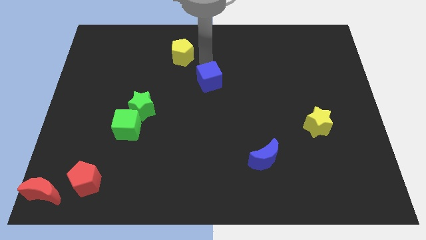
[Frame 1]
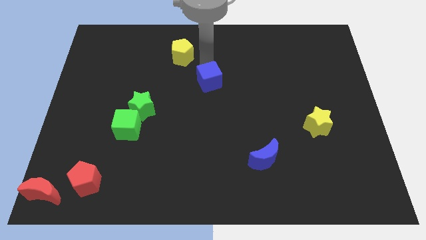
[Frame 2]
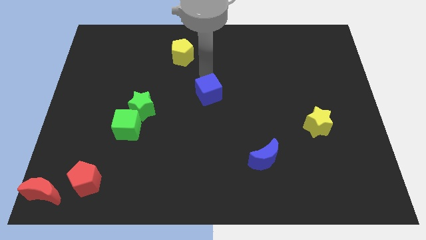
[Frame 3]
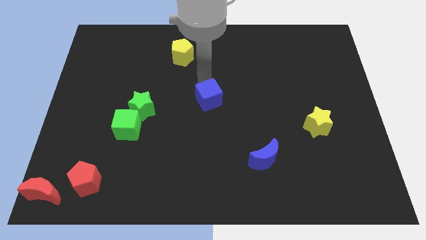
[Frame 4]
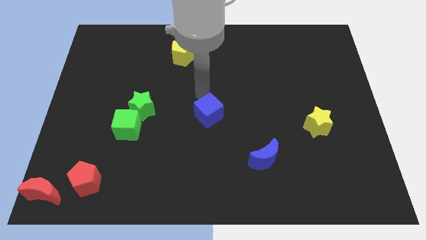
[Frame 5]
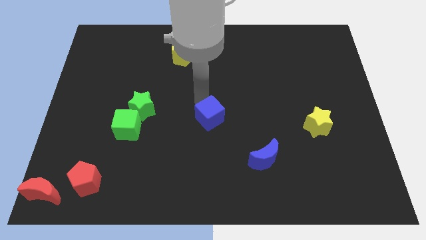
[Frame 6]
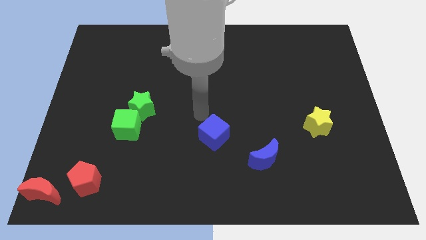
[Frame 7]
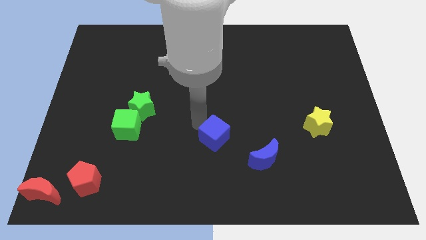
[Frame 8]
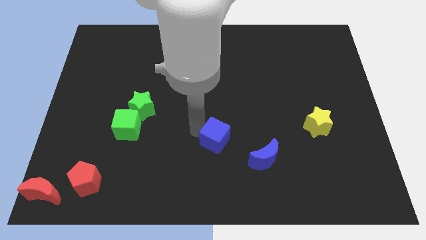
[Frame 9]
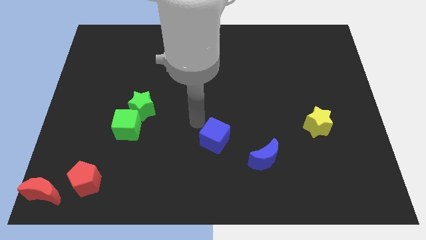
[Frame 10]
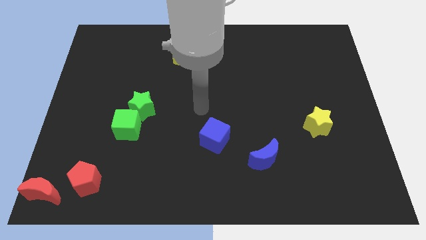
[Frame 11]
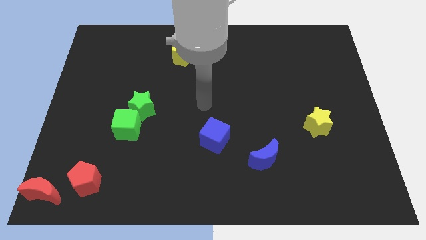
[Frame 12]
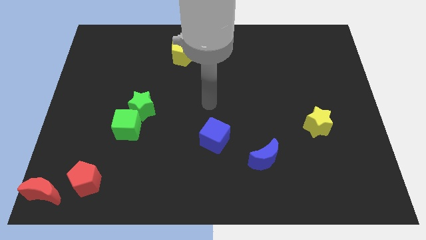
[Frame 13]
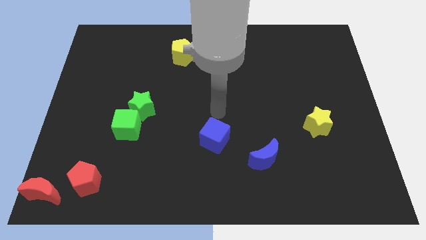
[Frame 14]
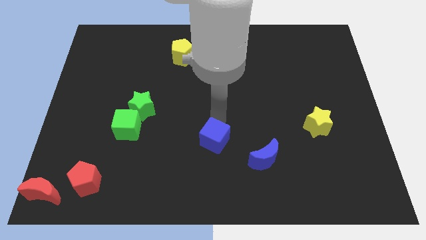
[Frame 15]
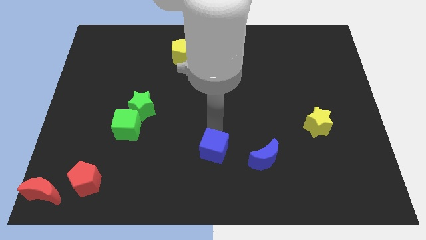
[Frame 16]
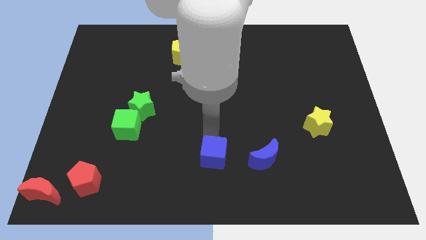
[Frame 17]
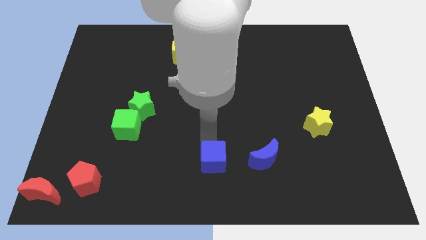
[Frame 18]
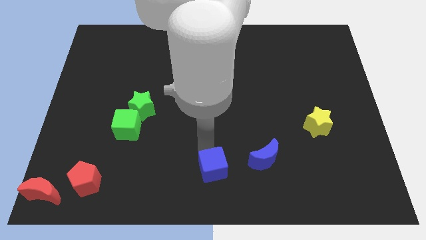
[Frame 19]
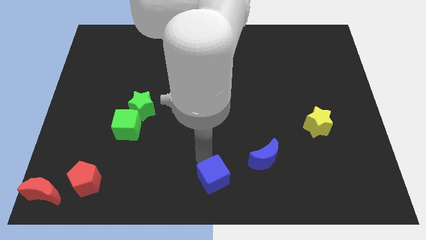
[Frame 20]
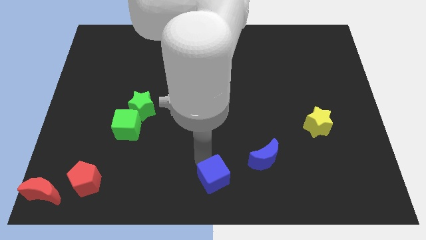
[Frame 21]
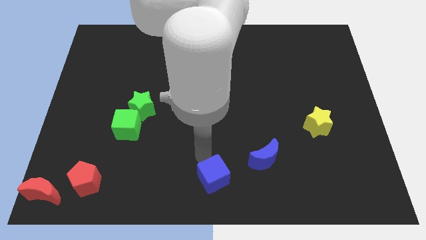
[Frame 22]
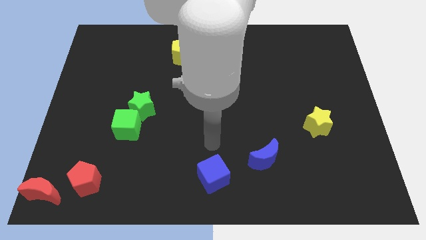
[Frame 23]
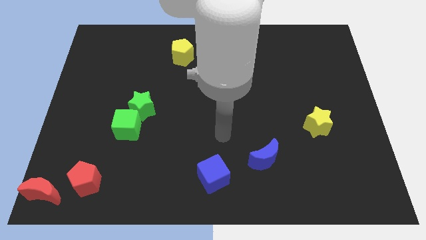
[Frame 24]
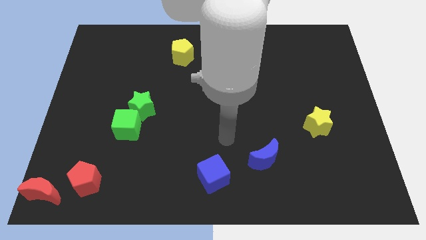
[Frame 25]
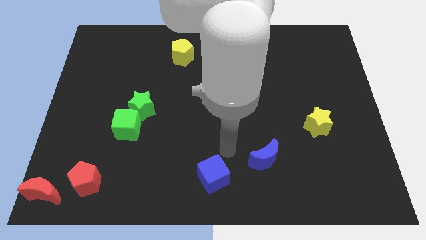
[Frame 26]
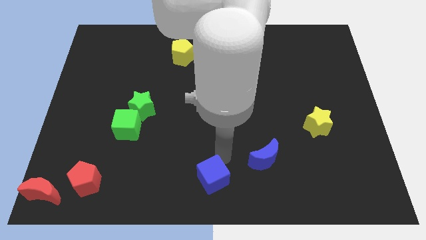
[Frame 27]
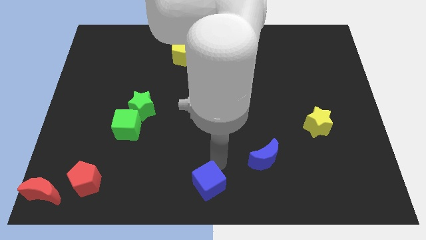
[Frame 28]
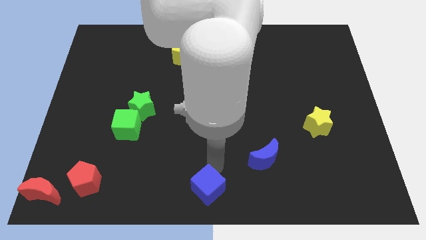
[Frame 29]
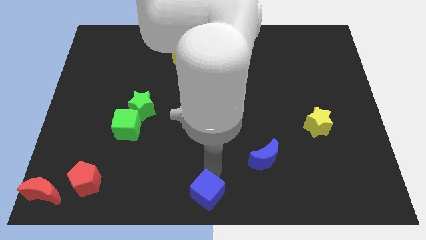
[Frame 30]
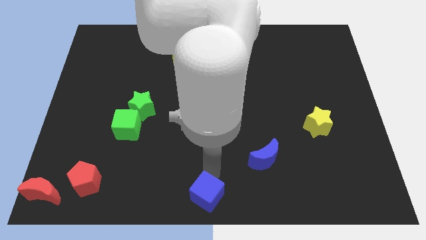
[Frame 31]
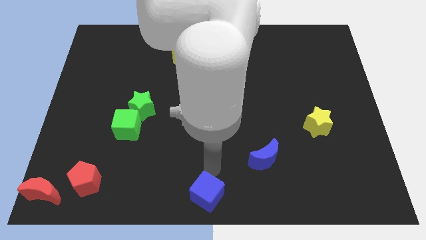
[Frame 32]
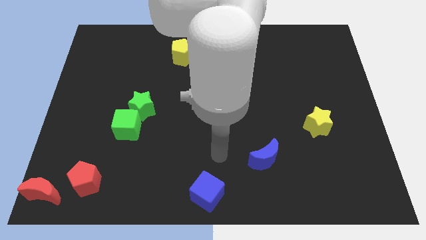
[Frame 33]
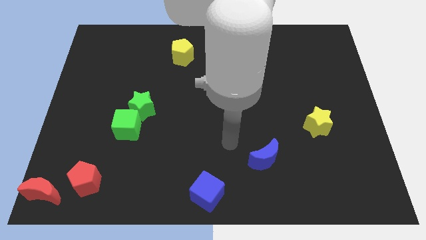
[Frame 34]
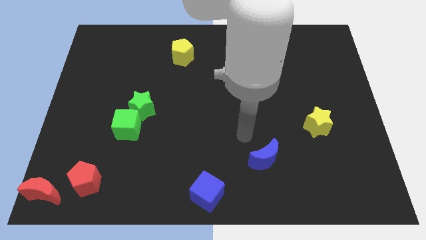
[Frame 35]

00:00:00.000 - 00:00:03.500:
move blue cube at bottom center

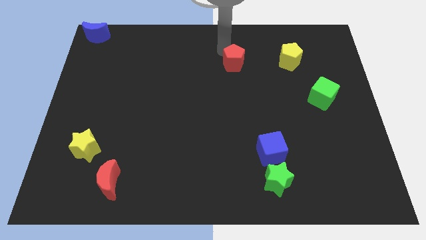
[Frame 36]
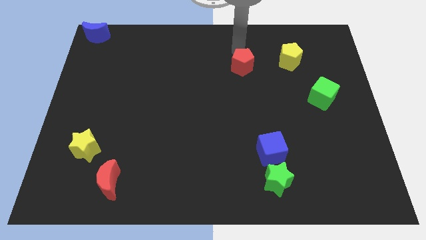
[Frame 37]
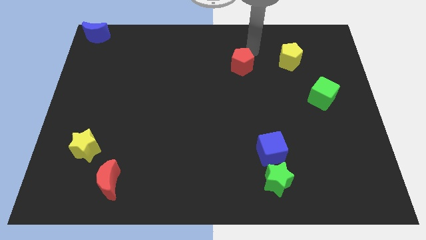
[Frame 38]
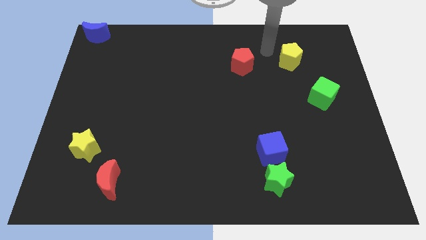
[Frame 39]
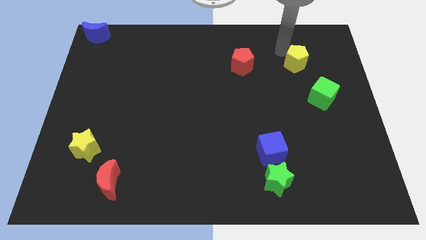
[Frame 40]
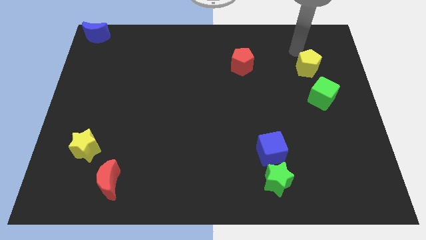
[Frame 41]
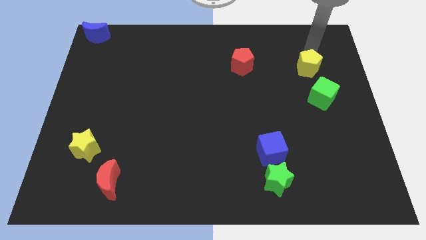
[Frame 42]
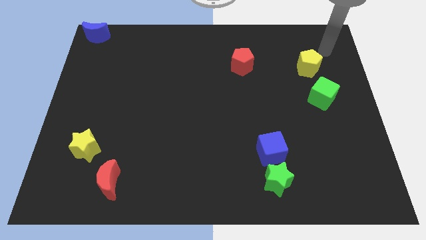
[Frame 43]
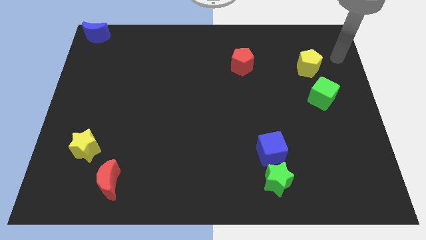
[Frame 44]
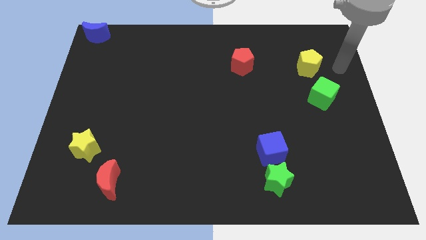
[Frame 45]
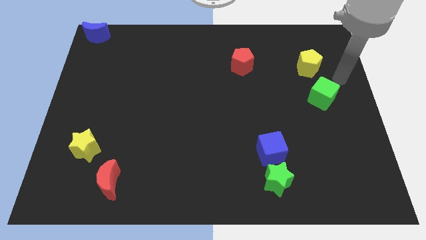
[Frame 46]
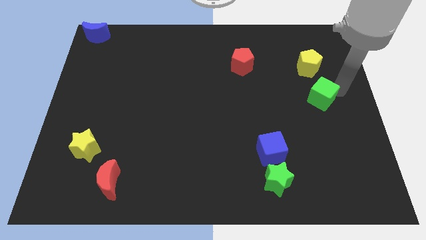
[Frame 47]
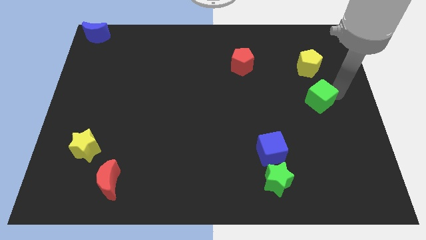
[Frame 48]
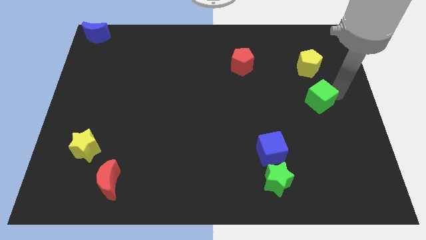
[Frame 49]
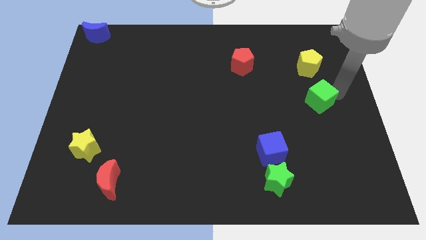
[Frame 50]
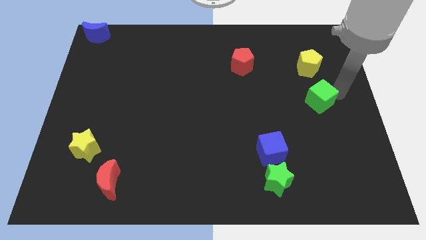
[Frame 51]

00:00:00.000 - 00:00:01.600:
touch the yellow pentagon

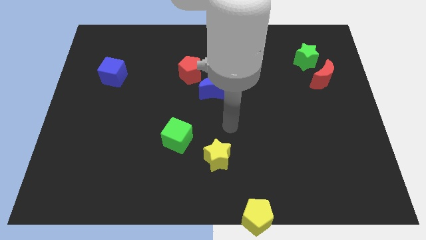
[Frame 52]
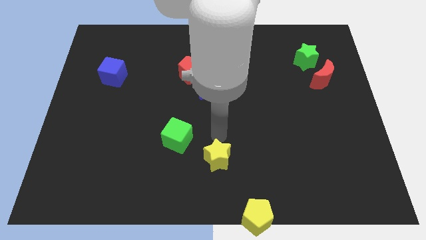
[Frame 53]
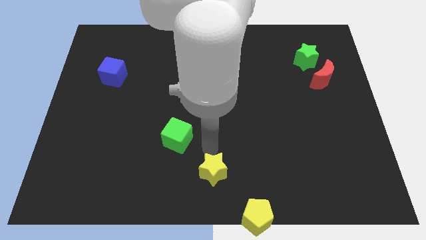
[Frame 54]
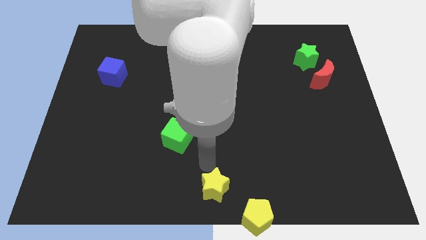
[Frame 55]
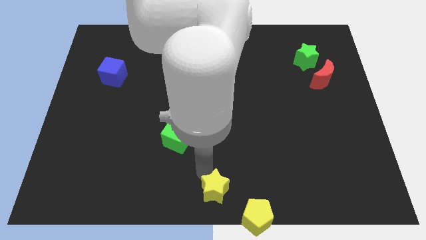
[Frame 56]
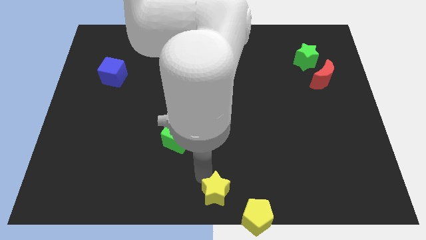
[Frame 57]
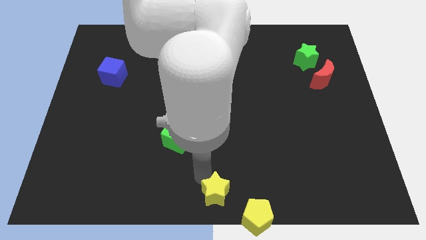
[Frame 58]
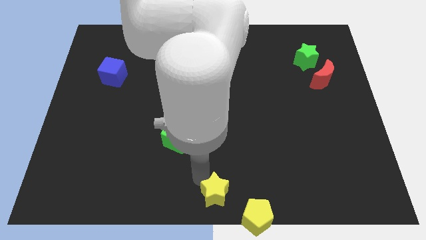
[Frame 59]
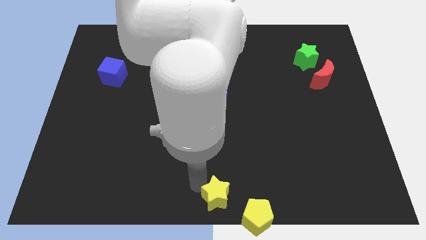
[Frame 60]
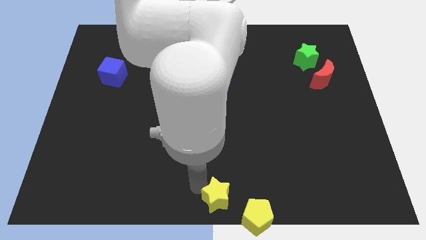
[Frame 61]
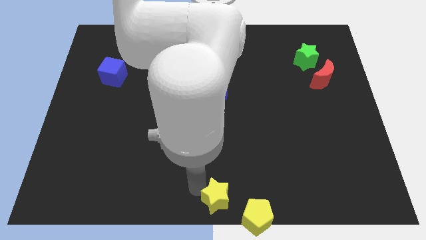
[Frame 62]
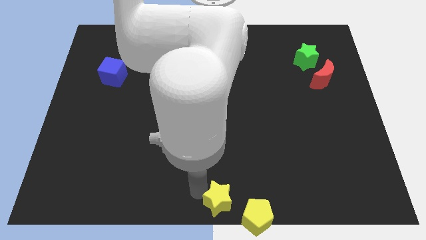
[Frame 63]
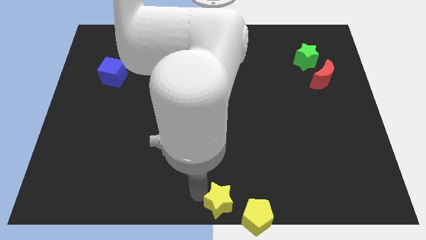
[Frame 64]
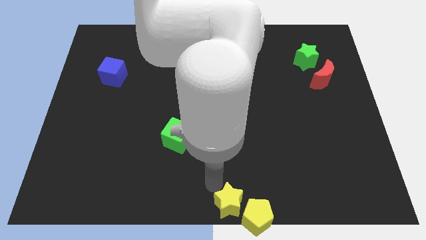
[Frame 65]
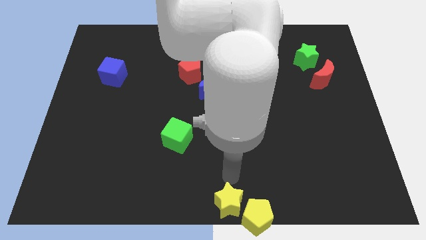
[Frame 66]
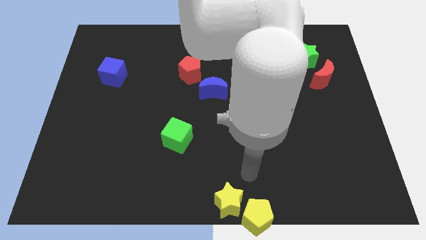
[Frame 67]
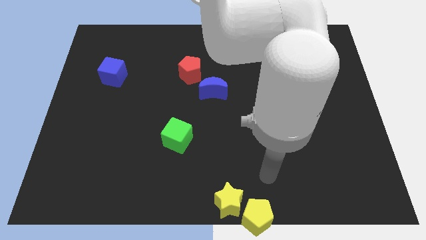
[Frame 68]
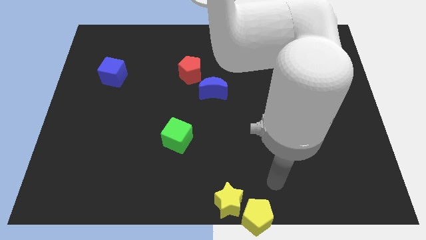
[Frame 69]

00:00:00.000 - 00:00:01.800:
place yellow star to the left of yellow pentagon

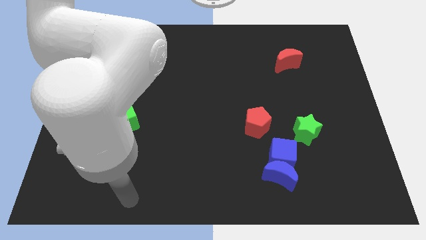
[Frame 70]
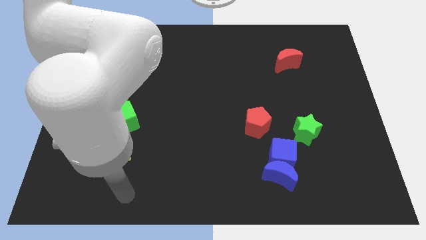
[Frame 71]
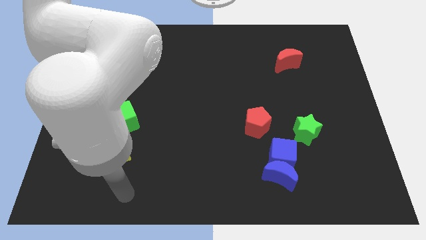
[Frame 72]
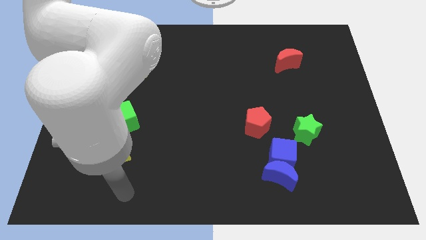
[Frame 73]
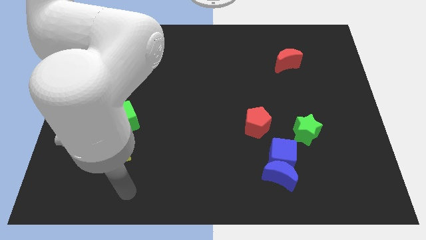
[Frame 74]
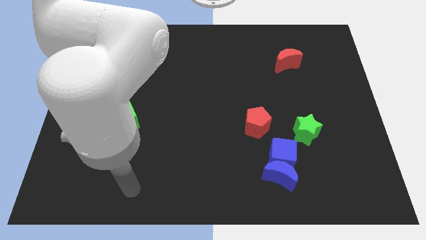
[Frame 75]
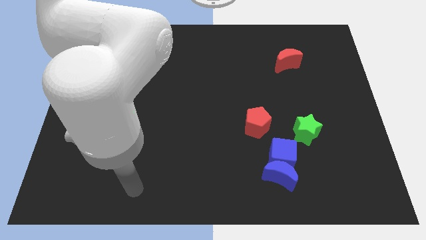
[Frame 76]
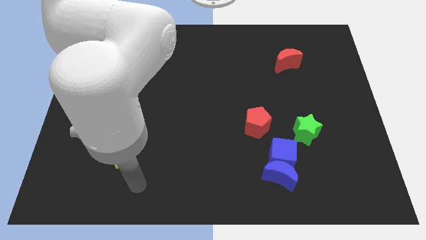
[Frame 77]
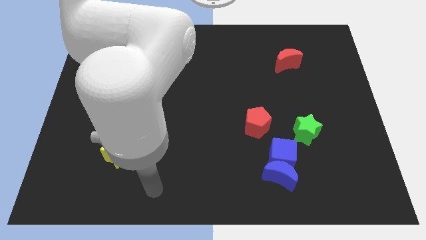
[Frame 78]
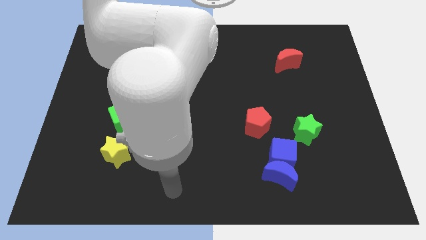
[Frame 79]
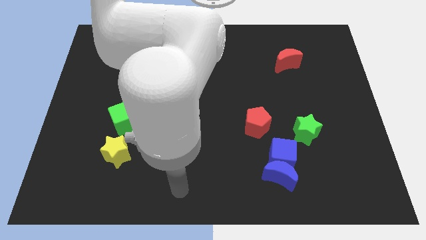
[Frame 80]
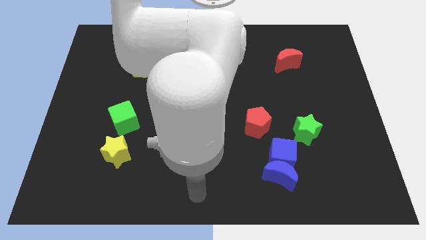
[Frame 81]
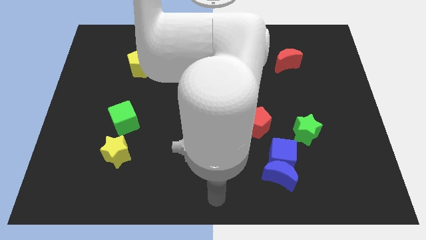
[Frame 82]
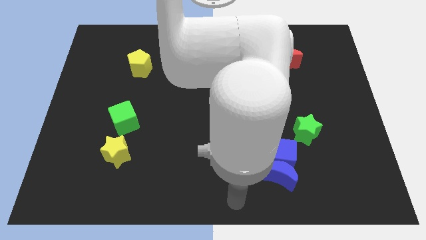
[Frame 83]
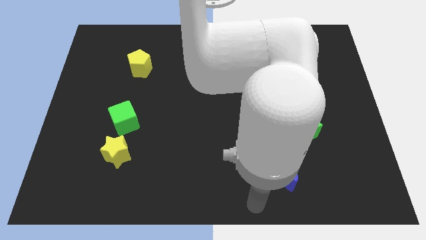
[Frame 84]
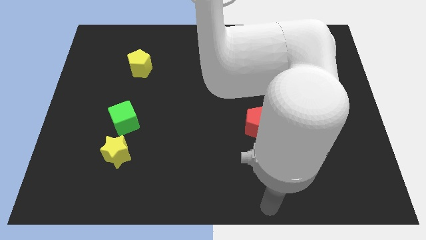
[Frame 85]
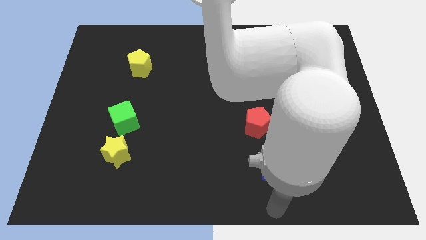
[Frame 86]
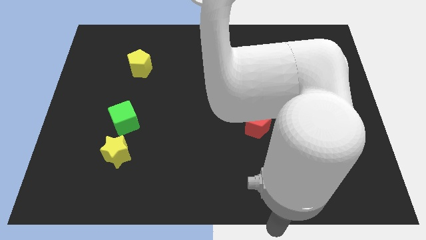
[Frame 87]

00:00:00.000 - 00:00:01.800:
move your arm away from the bottom side of the yellow star

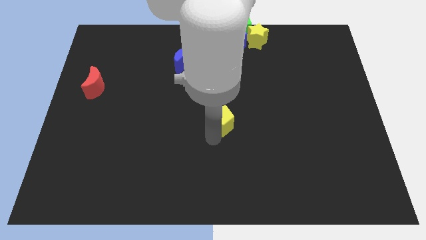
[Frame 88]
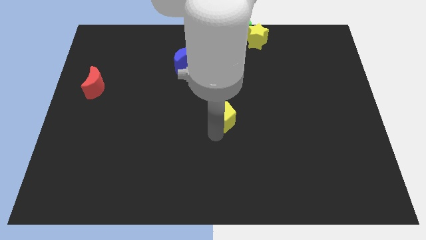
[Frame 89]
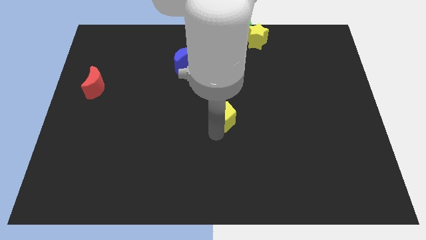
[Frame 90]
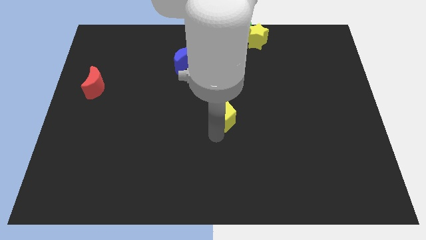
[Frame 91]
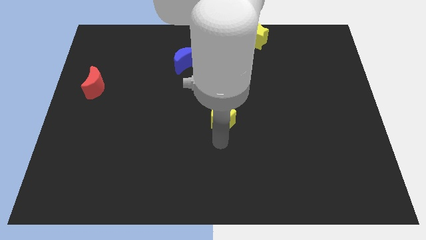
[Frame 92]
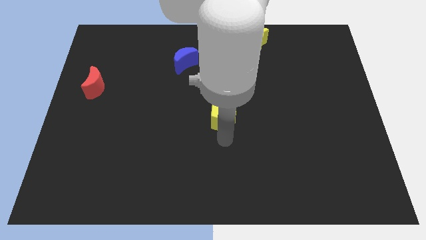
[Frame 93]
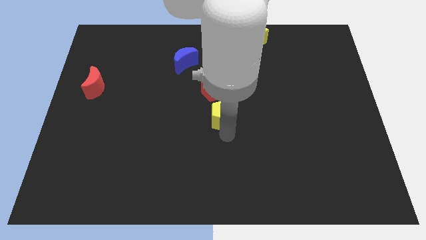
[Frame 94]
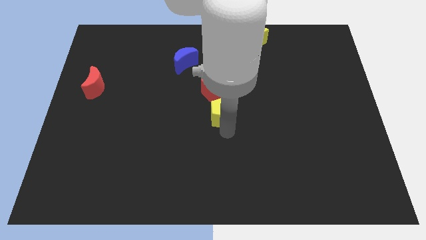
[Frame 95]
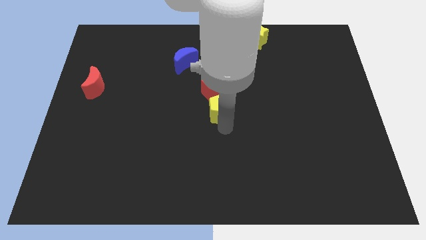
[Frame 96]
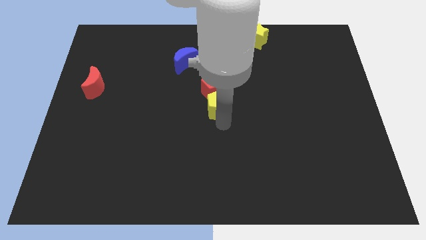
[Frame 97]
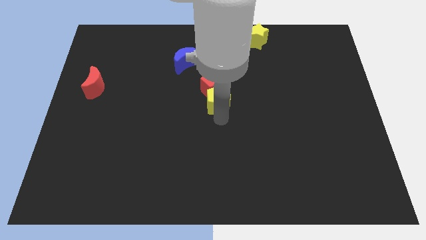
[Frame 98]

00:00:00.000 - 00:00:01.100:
push the yellow pentagon into the red pentagon